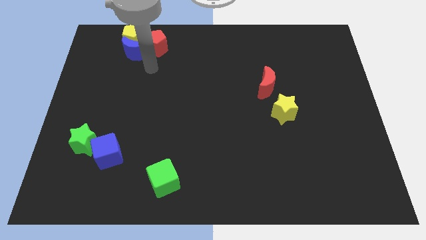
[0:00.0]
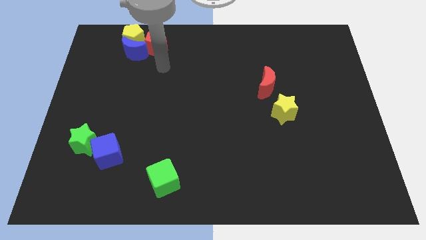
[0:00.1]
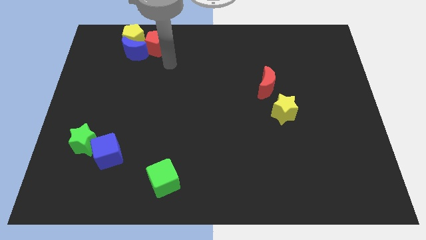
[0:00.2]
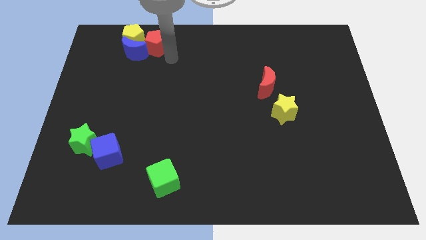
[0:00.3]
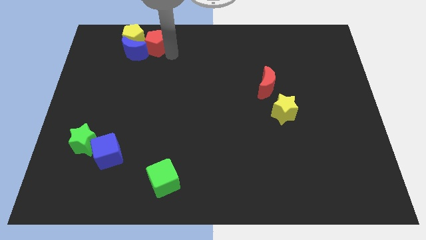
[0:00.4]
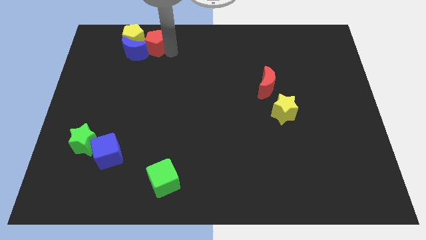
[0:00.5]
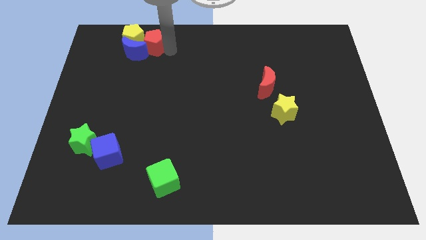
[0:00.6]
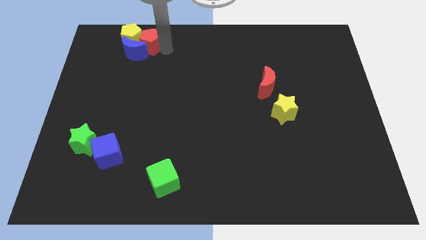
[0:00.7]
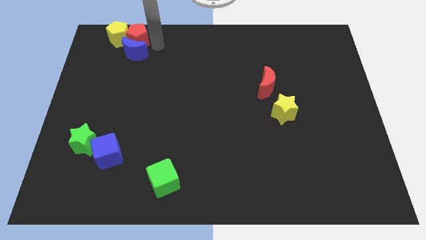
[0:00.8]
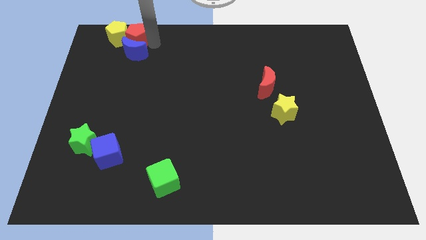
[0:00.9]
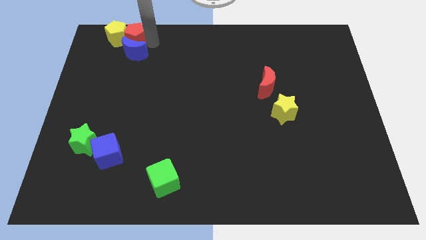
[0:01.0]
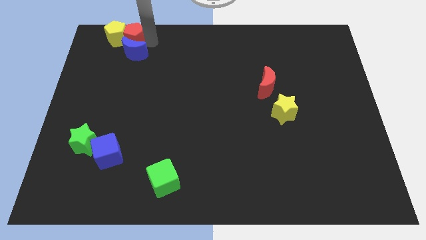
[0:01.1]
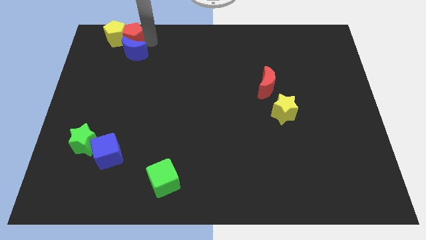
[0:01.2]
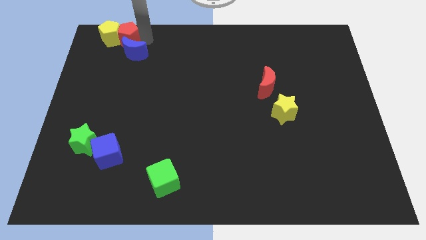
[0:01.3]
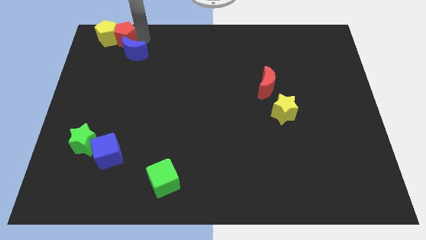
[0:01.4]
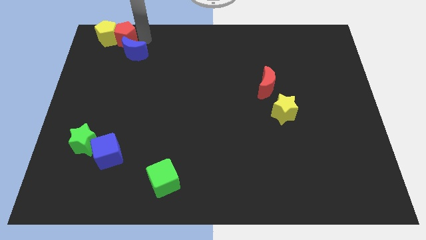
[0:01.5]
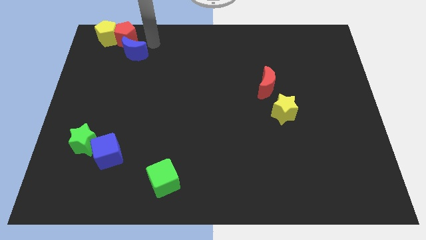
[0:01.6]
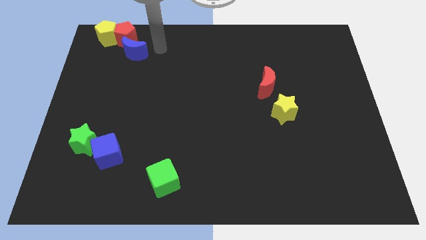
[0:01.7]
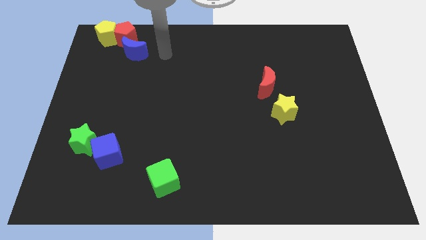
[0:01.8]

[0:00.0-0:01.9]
push the red pentagon into the yellow pentagon

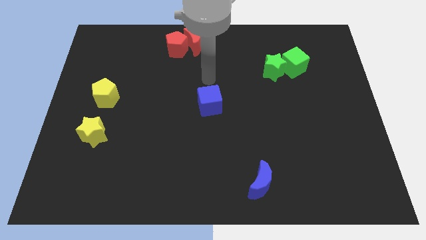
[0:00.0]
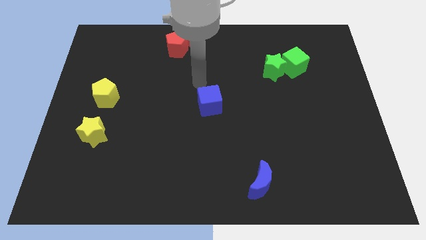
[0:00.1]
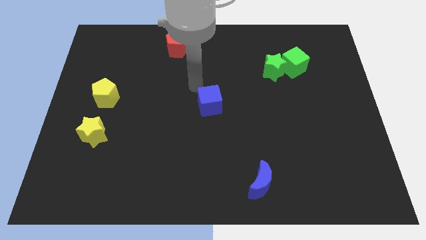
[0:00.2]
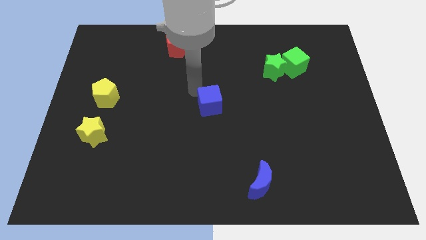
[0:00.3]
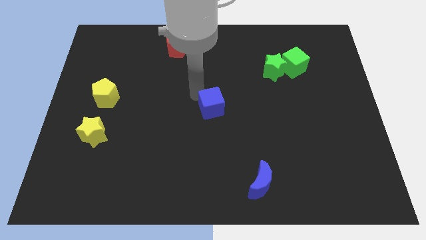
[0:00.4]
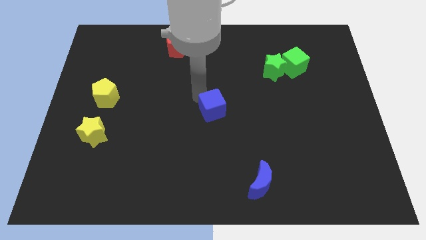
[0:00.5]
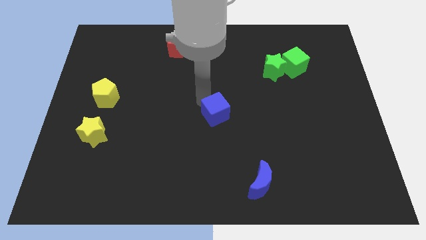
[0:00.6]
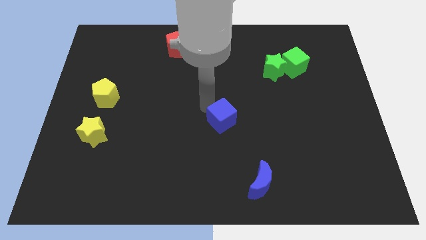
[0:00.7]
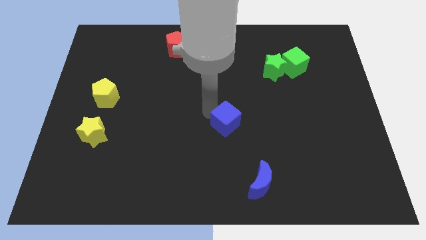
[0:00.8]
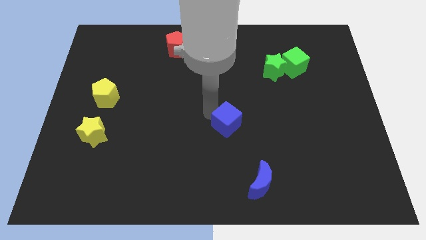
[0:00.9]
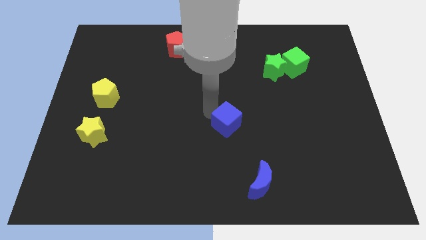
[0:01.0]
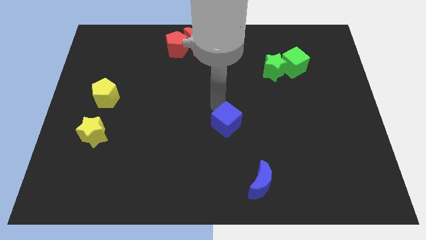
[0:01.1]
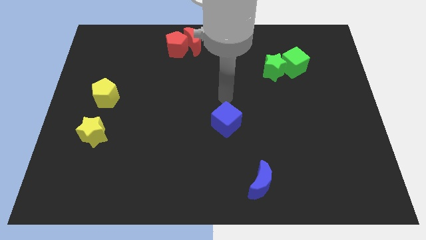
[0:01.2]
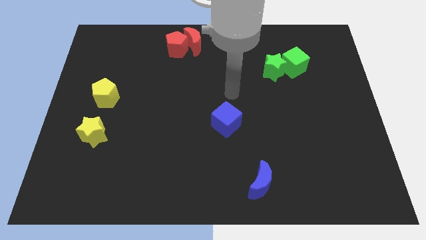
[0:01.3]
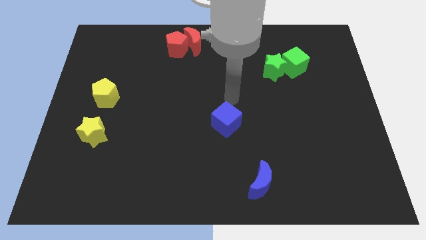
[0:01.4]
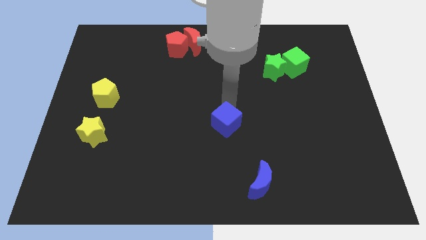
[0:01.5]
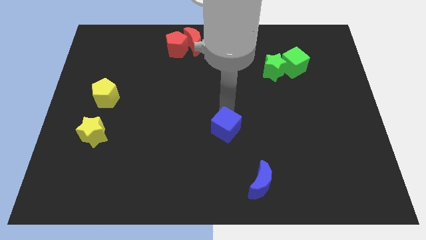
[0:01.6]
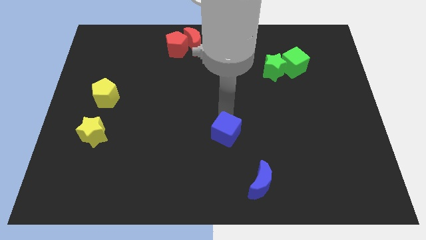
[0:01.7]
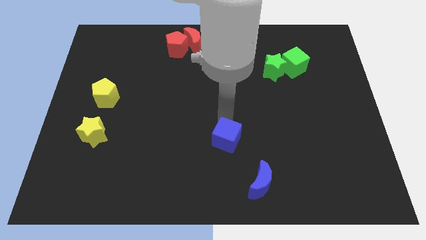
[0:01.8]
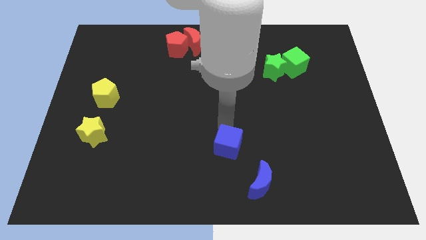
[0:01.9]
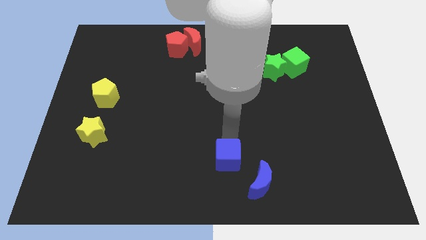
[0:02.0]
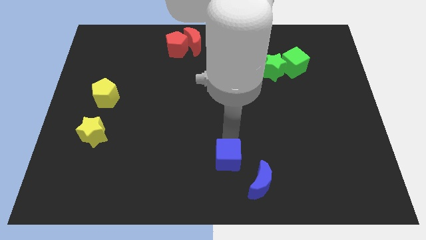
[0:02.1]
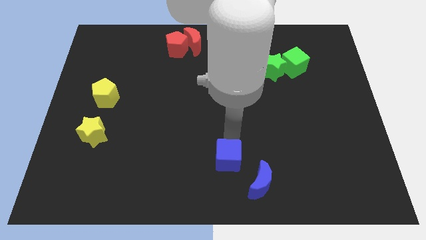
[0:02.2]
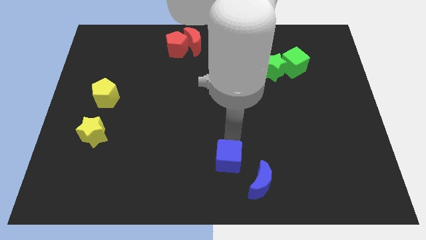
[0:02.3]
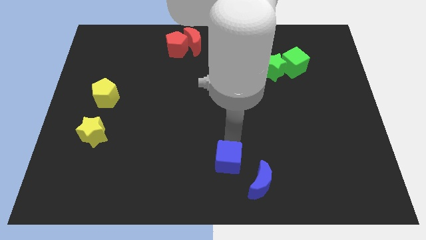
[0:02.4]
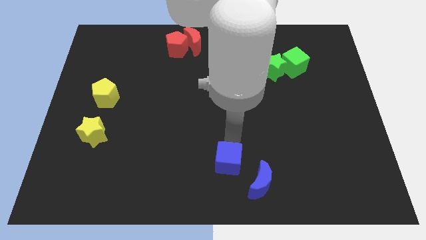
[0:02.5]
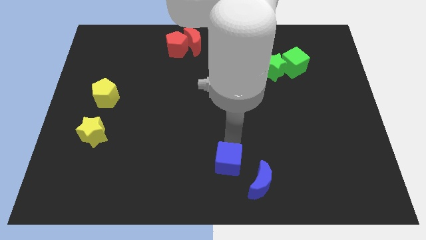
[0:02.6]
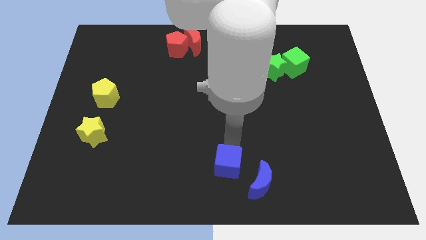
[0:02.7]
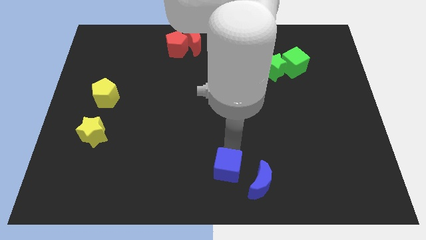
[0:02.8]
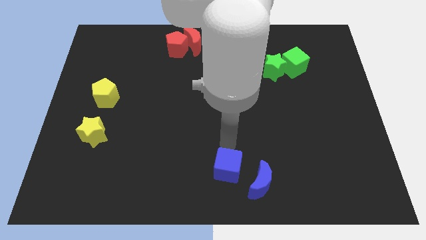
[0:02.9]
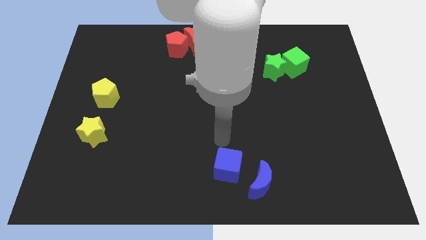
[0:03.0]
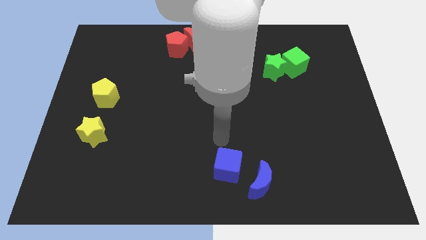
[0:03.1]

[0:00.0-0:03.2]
move the blue cube towards the blue moon at the left

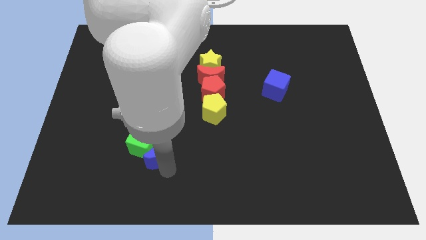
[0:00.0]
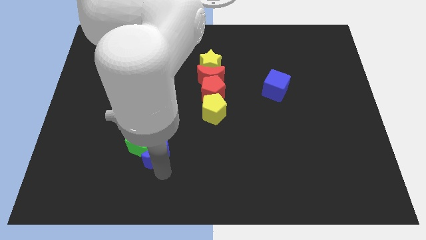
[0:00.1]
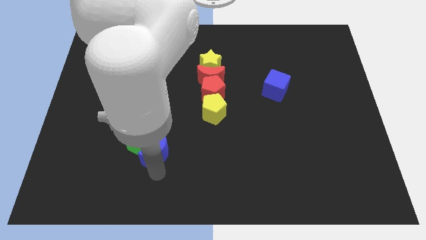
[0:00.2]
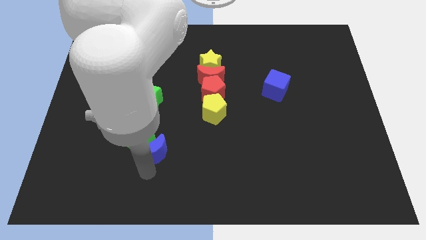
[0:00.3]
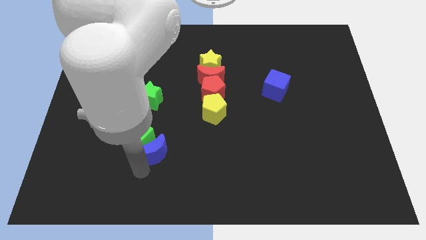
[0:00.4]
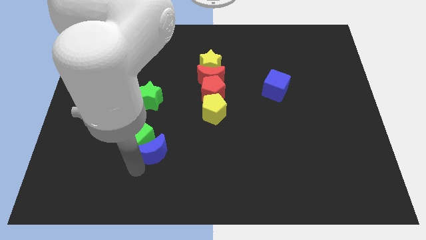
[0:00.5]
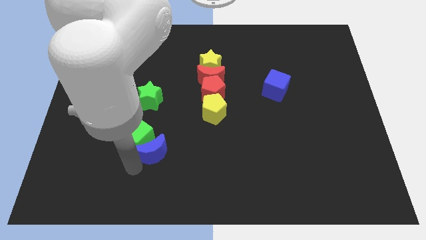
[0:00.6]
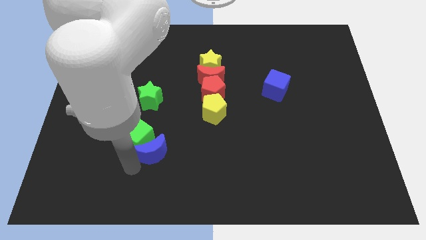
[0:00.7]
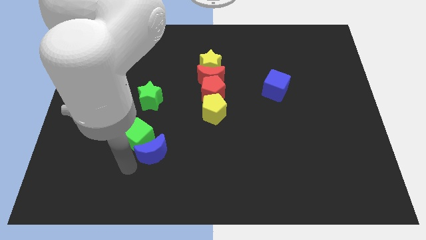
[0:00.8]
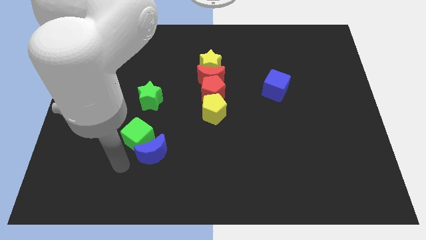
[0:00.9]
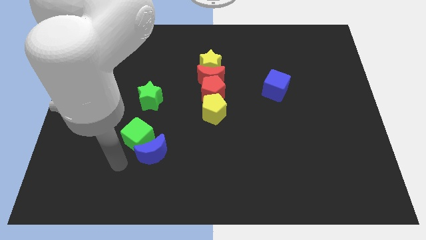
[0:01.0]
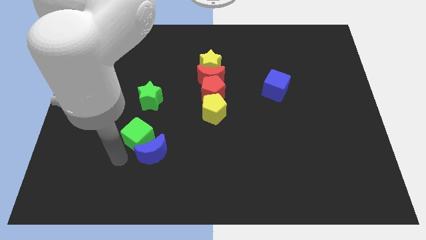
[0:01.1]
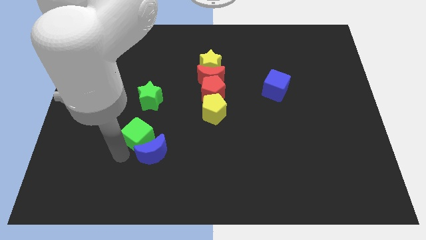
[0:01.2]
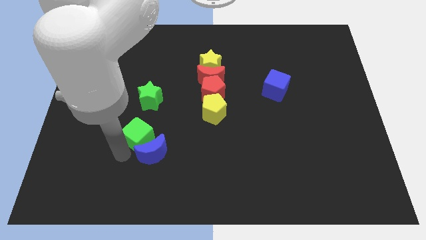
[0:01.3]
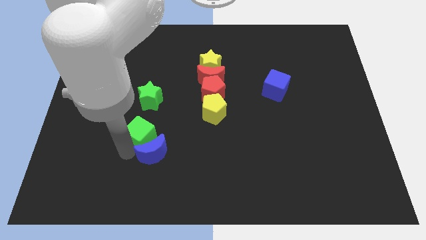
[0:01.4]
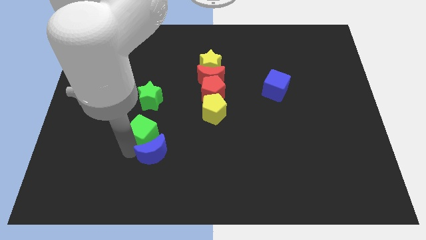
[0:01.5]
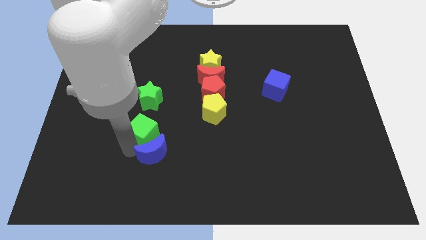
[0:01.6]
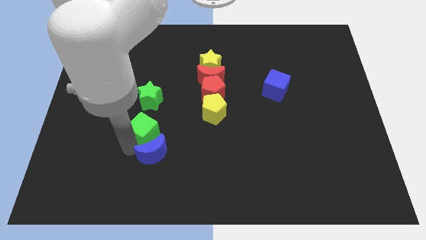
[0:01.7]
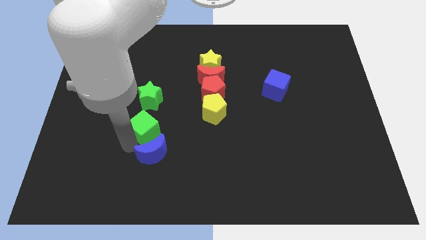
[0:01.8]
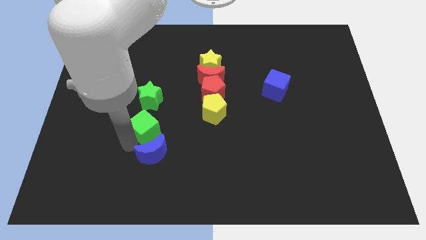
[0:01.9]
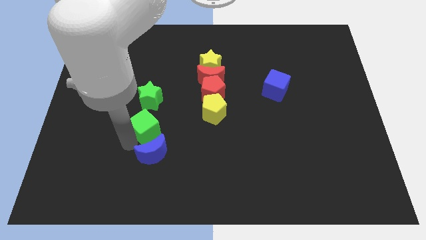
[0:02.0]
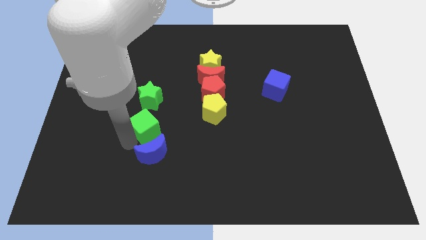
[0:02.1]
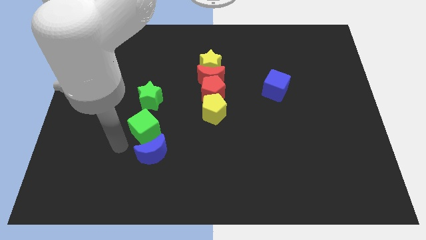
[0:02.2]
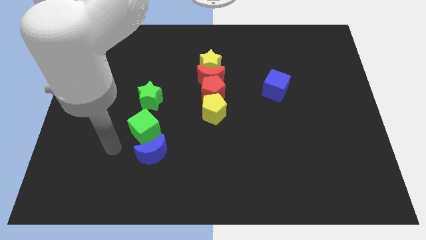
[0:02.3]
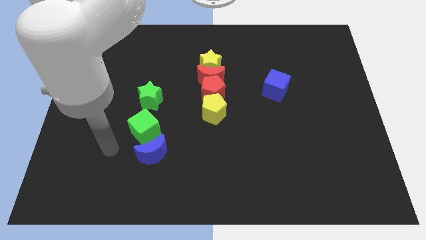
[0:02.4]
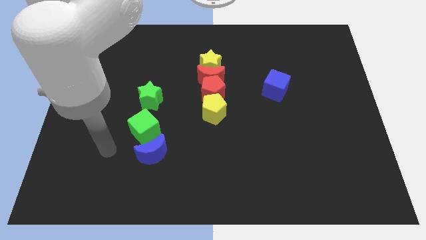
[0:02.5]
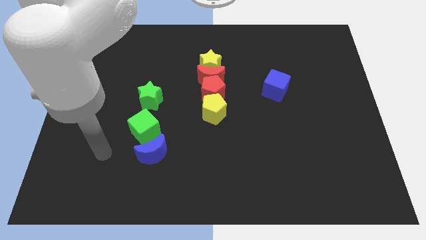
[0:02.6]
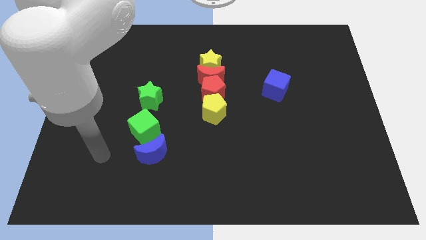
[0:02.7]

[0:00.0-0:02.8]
separate the green cube and blue moon

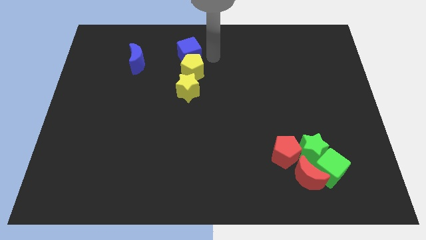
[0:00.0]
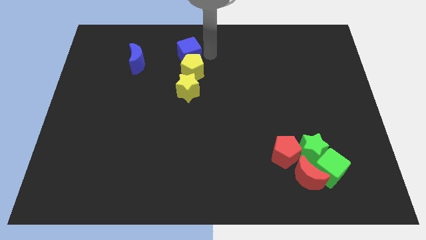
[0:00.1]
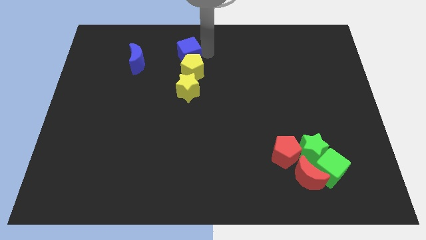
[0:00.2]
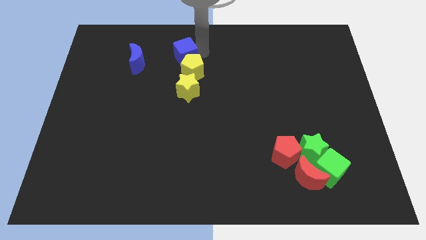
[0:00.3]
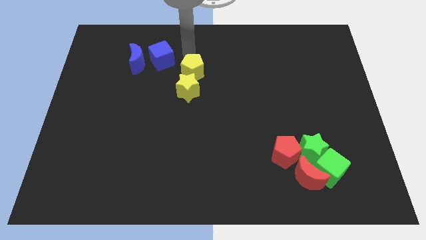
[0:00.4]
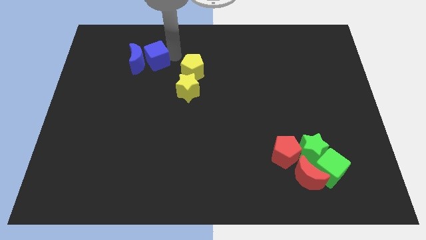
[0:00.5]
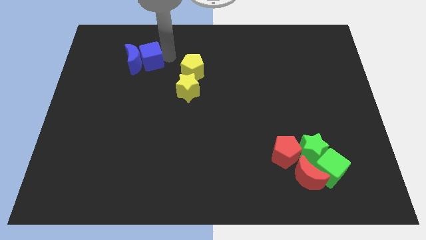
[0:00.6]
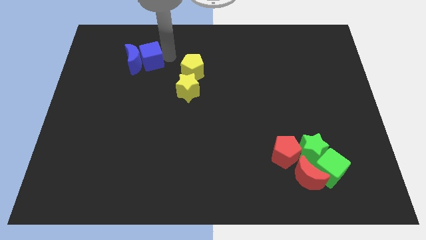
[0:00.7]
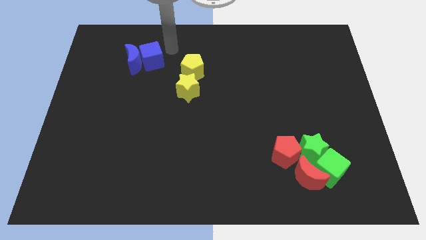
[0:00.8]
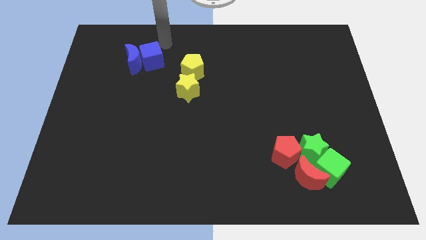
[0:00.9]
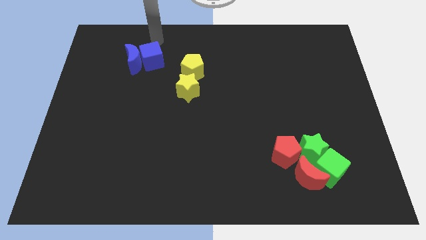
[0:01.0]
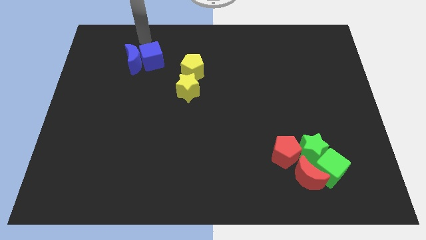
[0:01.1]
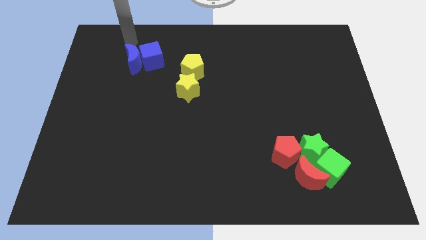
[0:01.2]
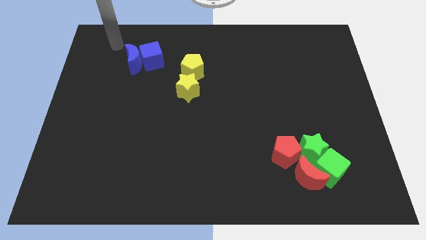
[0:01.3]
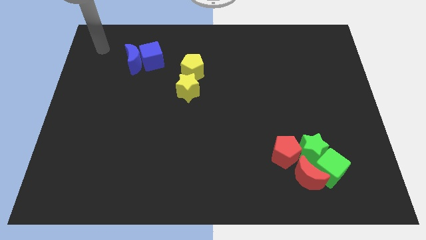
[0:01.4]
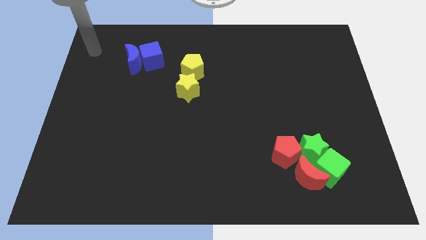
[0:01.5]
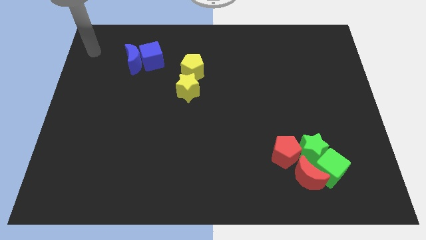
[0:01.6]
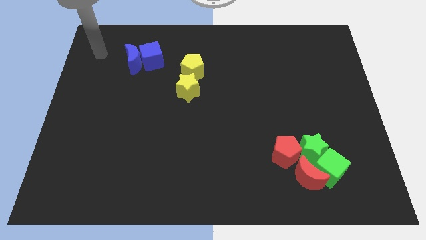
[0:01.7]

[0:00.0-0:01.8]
push the blue cube to the right side of the blue moon
